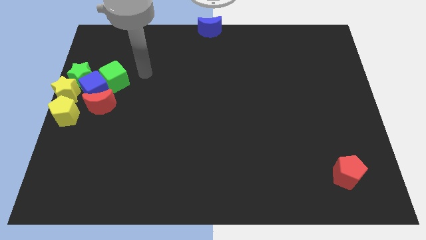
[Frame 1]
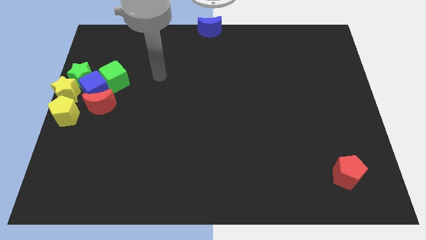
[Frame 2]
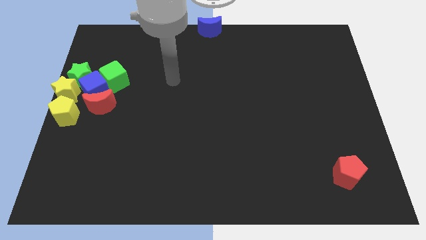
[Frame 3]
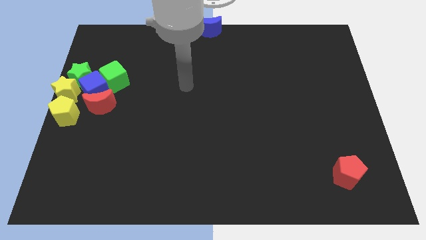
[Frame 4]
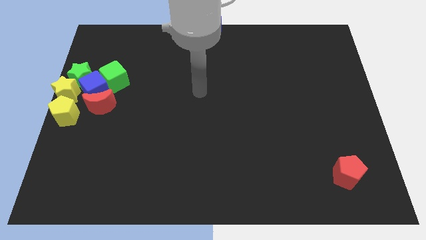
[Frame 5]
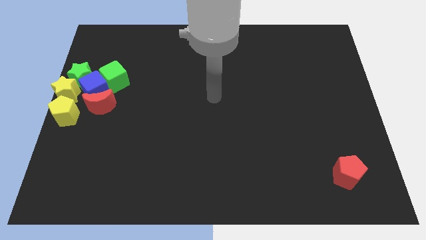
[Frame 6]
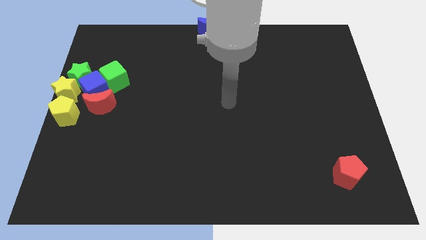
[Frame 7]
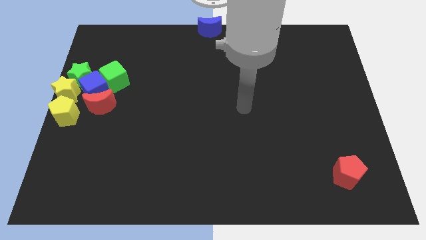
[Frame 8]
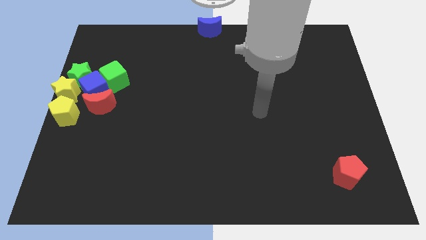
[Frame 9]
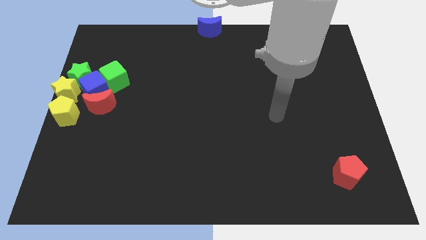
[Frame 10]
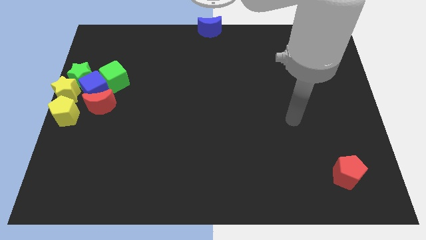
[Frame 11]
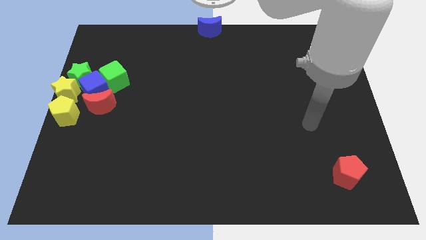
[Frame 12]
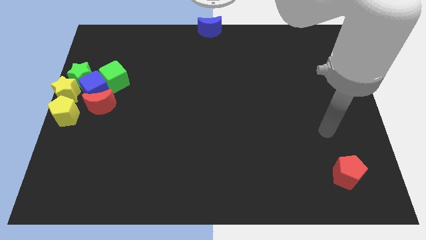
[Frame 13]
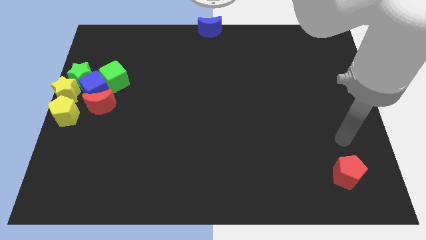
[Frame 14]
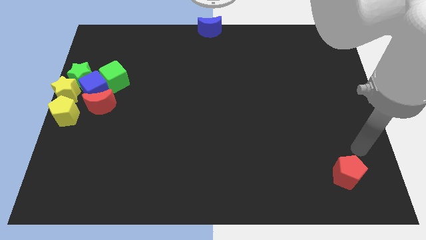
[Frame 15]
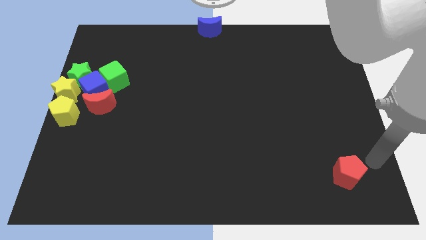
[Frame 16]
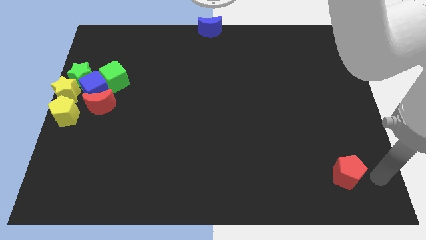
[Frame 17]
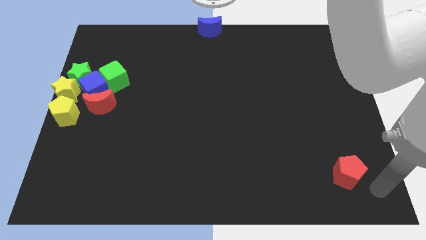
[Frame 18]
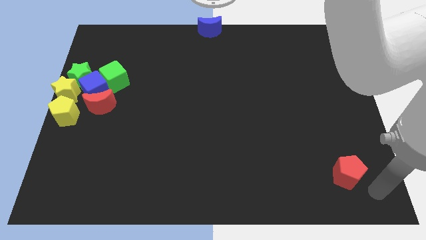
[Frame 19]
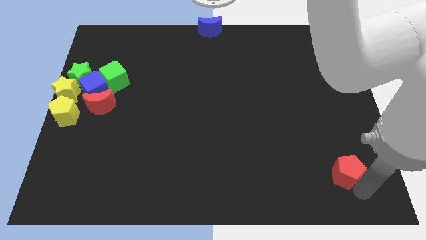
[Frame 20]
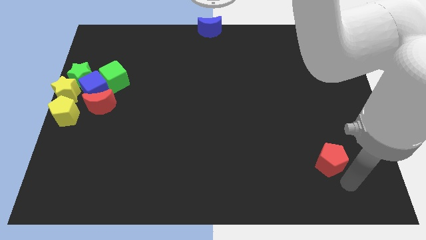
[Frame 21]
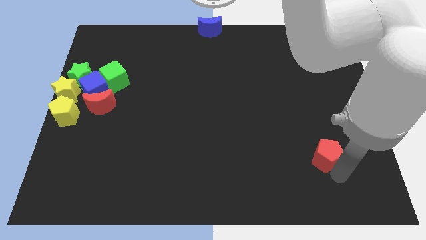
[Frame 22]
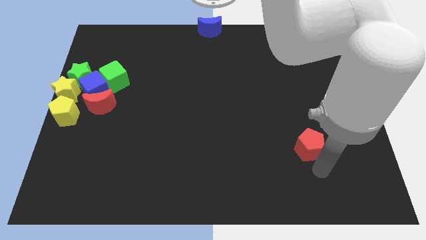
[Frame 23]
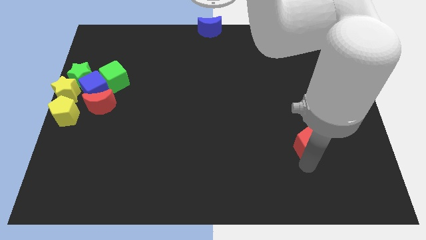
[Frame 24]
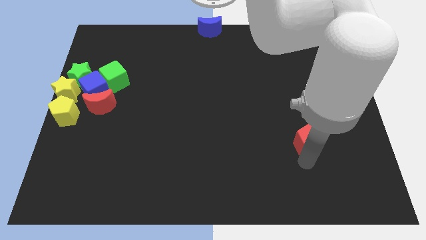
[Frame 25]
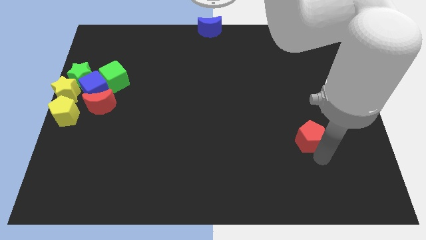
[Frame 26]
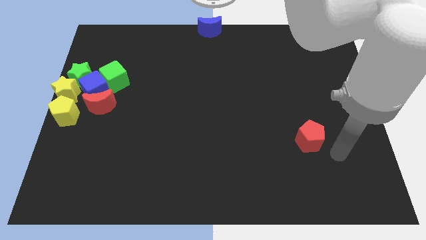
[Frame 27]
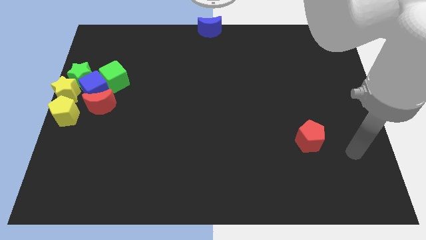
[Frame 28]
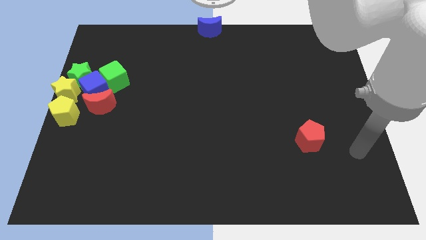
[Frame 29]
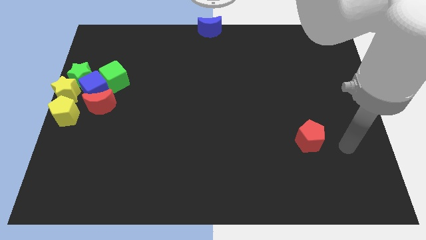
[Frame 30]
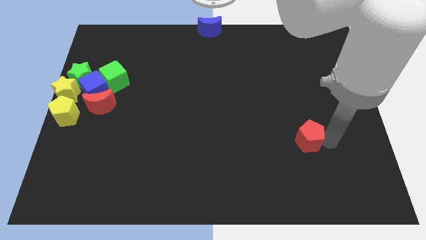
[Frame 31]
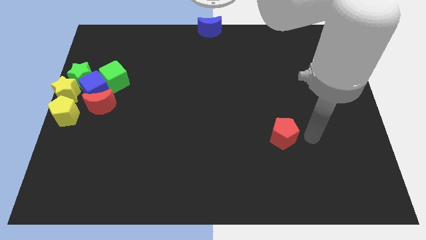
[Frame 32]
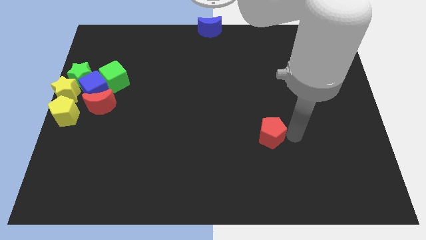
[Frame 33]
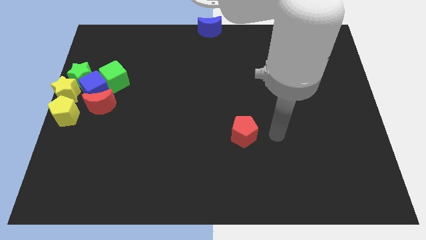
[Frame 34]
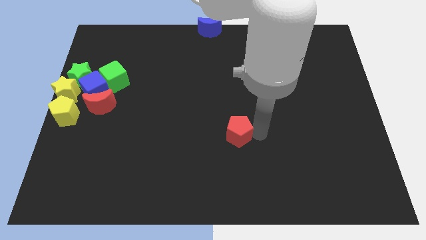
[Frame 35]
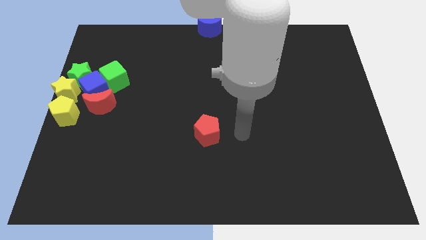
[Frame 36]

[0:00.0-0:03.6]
move the red pentagon towards the center of the board

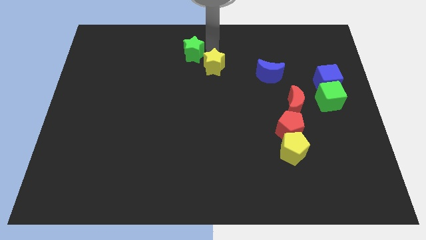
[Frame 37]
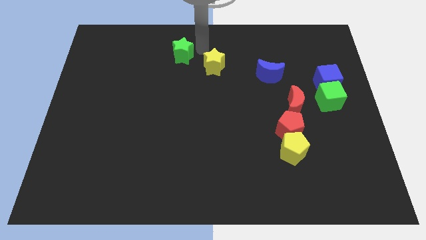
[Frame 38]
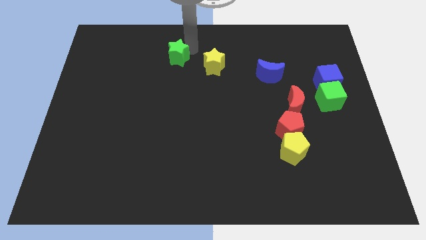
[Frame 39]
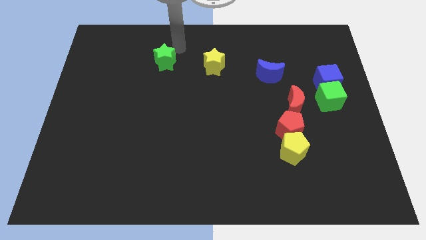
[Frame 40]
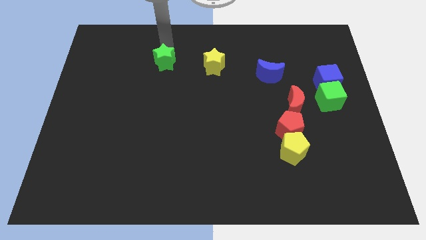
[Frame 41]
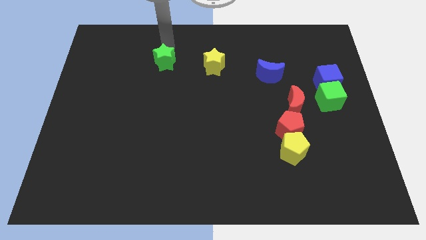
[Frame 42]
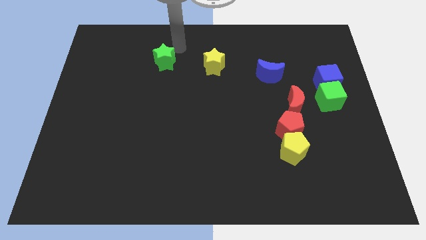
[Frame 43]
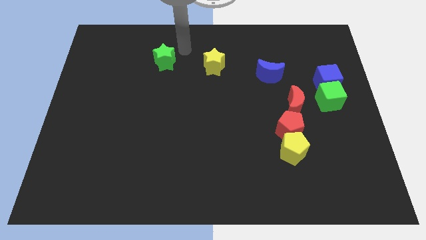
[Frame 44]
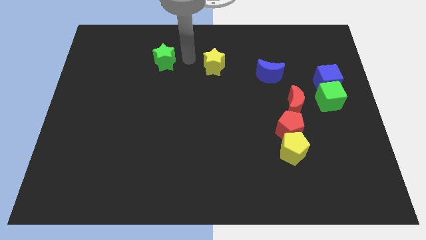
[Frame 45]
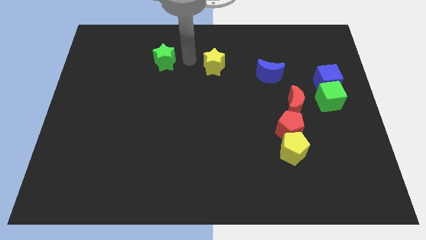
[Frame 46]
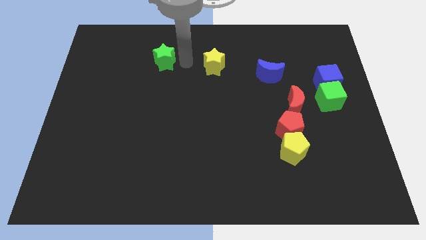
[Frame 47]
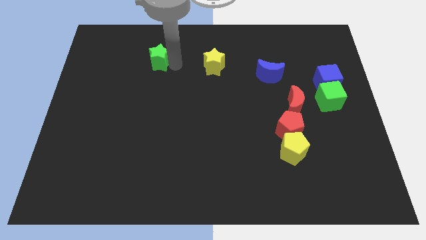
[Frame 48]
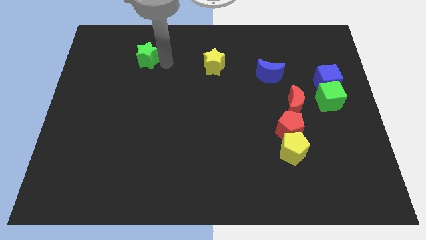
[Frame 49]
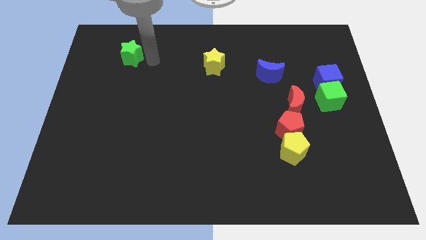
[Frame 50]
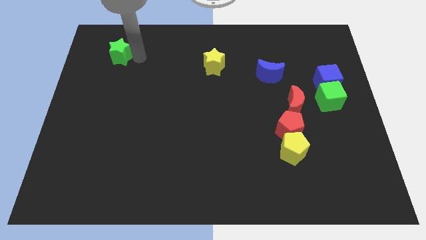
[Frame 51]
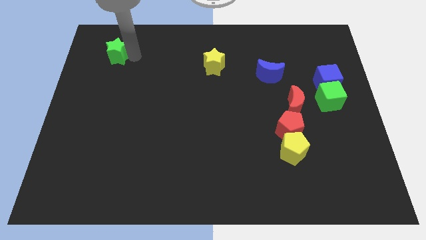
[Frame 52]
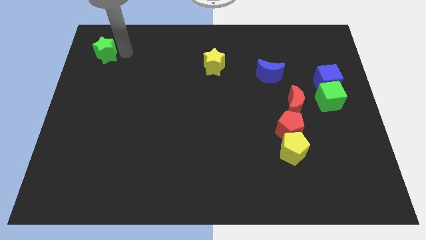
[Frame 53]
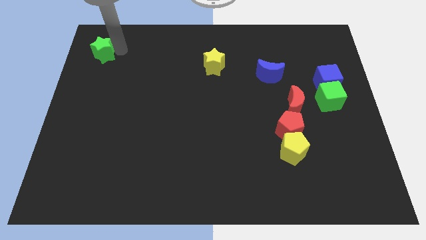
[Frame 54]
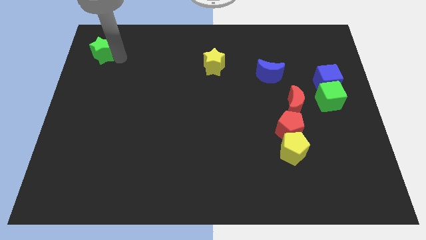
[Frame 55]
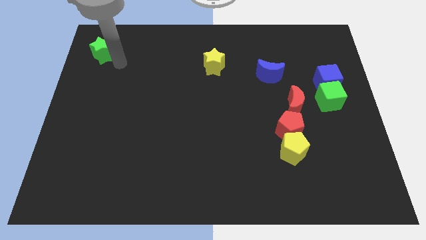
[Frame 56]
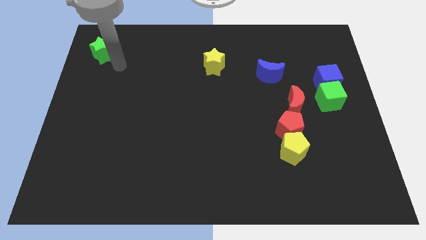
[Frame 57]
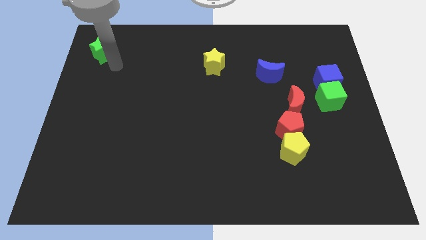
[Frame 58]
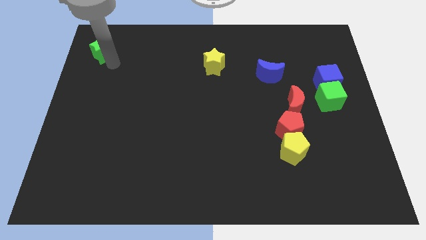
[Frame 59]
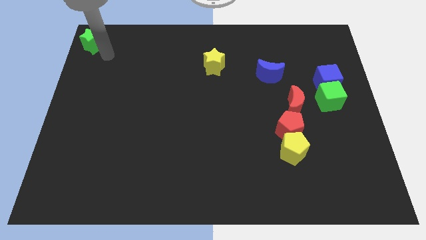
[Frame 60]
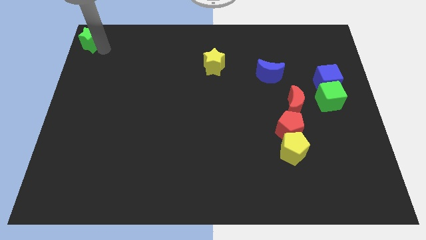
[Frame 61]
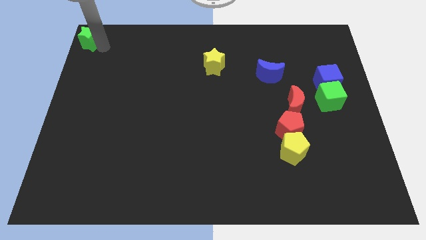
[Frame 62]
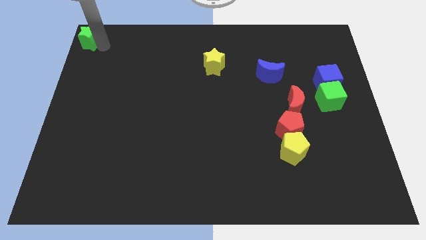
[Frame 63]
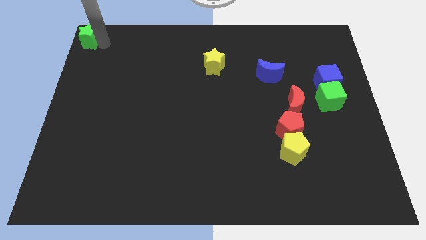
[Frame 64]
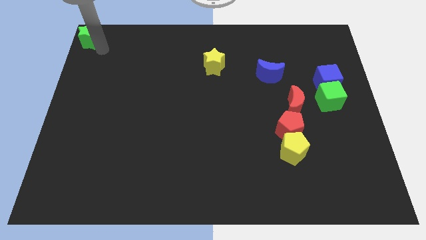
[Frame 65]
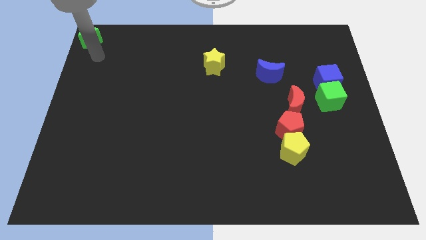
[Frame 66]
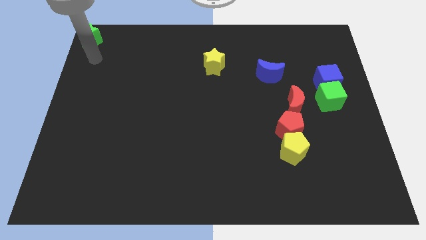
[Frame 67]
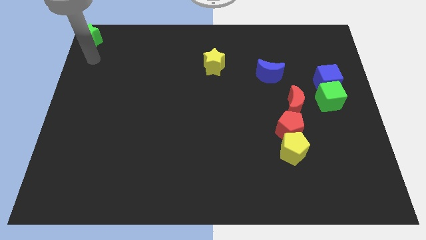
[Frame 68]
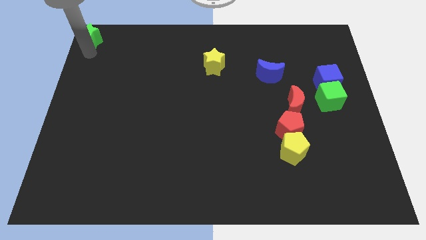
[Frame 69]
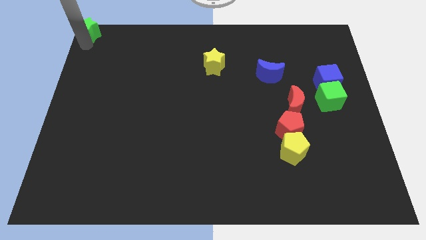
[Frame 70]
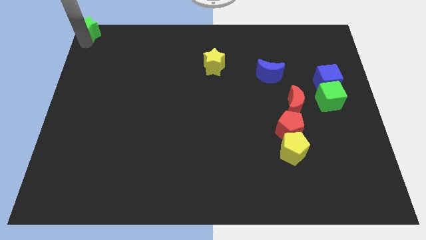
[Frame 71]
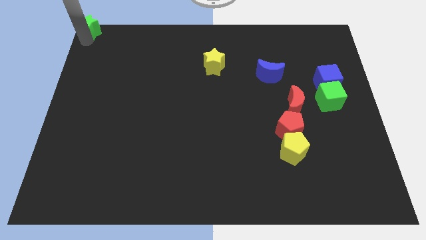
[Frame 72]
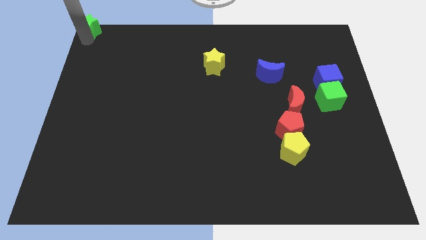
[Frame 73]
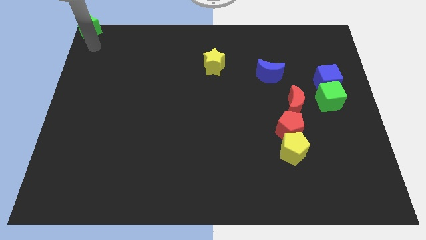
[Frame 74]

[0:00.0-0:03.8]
push the green star to the top left corner

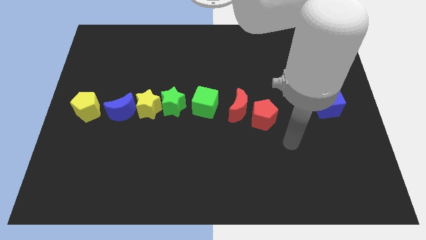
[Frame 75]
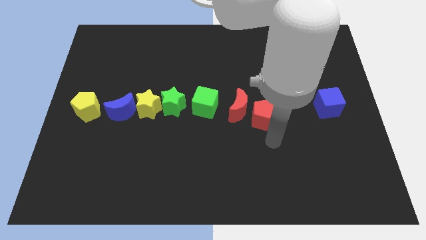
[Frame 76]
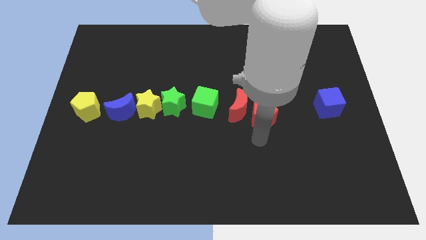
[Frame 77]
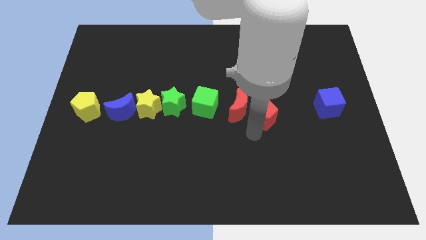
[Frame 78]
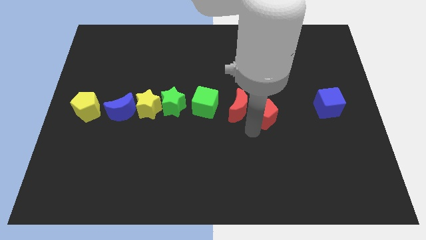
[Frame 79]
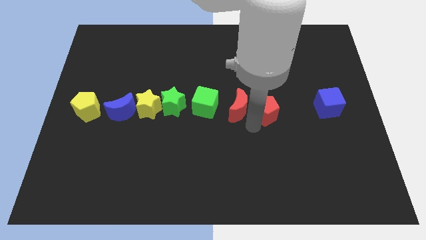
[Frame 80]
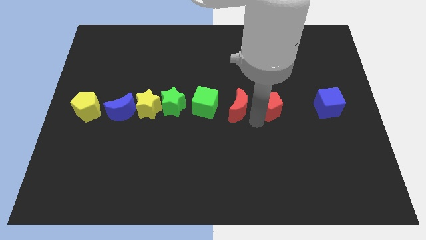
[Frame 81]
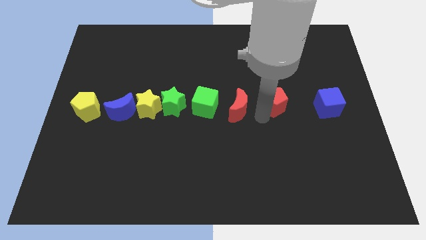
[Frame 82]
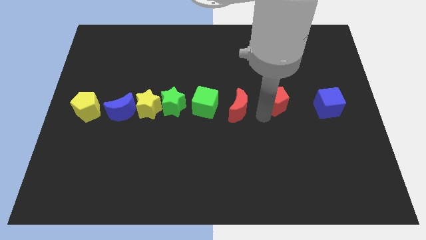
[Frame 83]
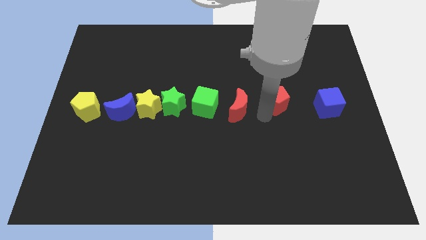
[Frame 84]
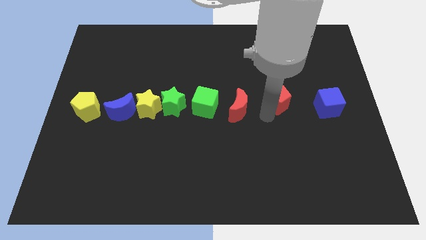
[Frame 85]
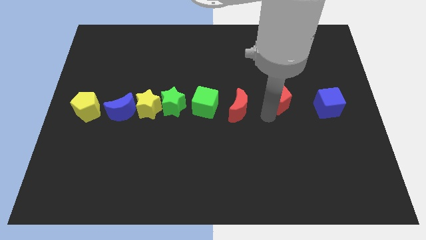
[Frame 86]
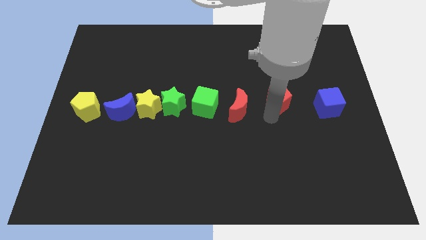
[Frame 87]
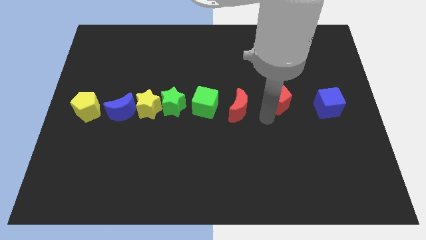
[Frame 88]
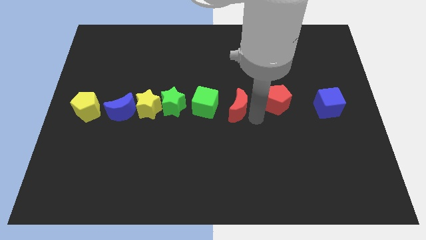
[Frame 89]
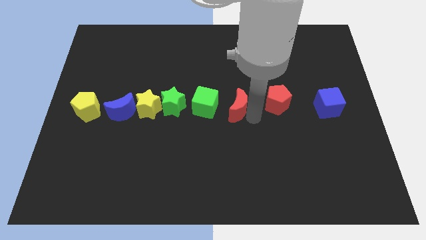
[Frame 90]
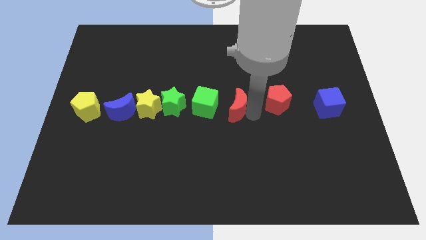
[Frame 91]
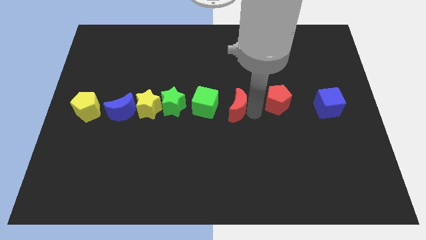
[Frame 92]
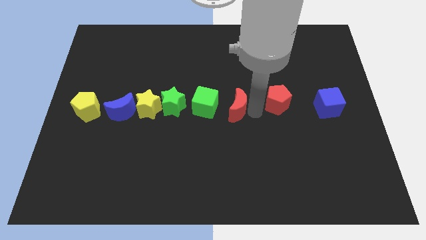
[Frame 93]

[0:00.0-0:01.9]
place the red pentagon parallel left to the blue cube
